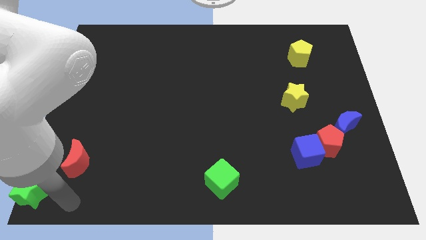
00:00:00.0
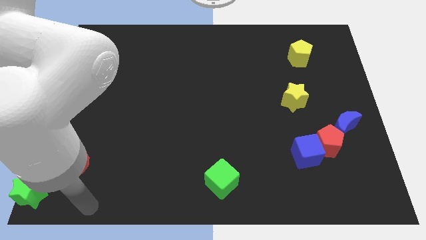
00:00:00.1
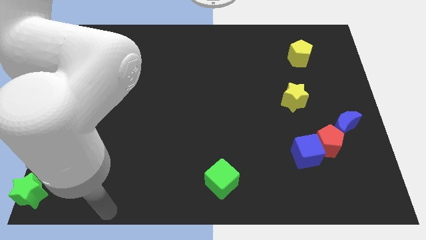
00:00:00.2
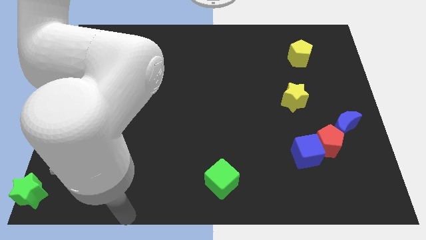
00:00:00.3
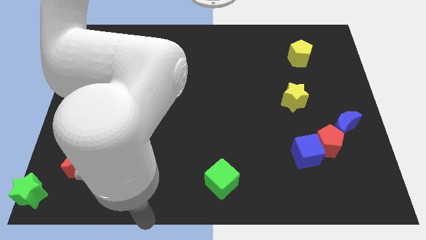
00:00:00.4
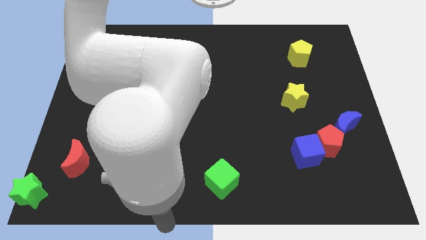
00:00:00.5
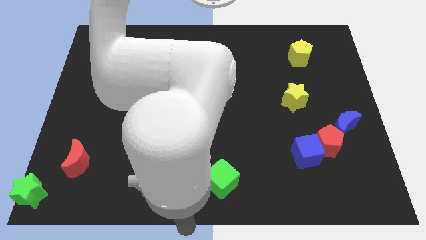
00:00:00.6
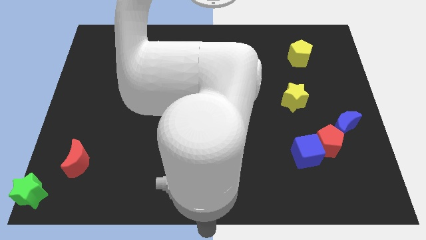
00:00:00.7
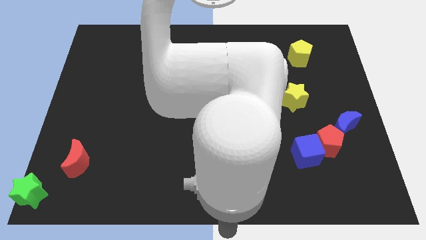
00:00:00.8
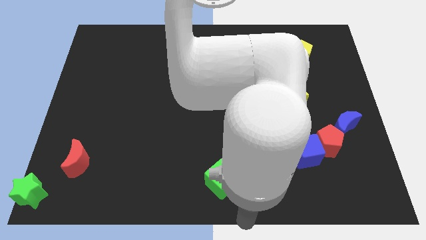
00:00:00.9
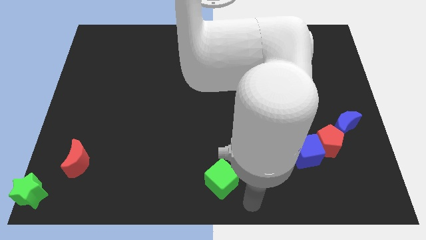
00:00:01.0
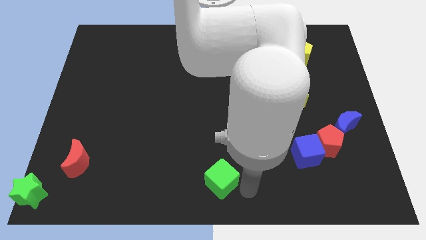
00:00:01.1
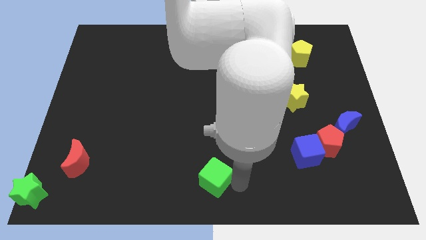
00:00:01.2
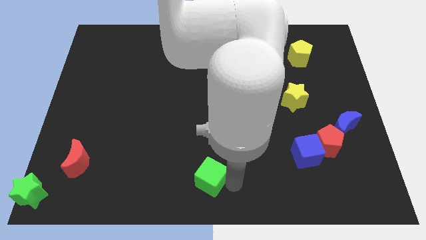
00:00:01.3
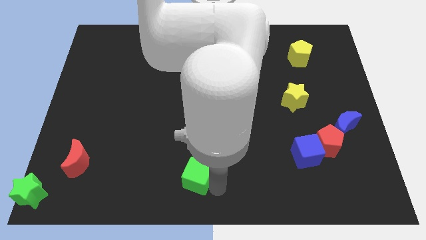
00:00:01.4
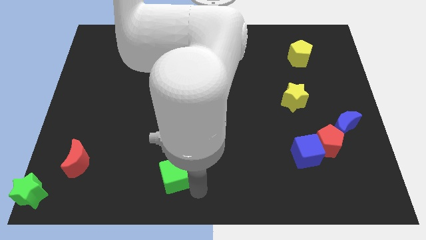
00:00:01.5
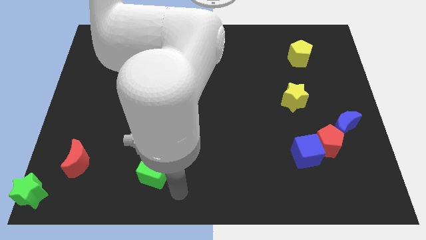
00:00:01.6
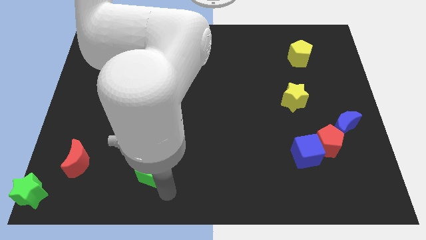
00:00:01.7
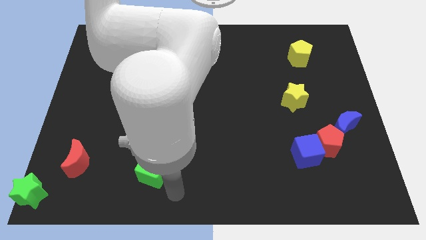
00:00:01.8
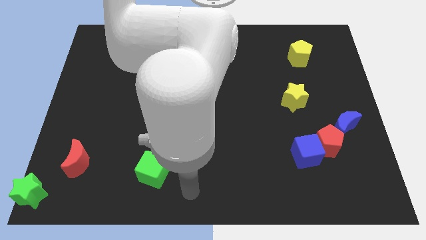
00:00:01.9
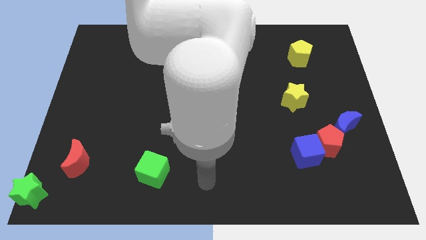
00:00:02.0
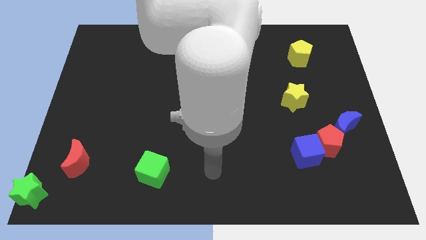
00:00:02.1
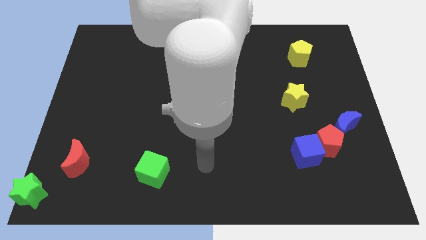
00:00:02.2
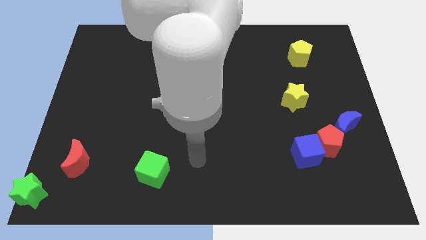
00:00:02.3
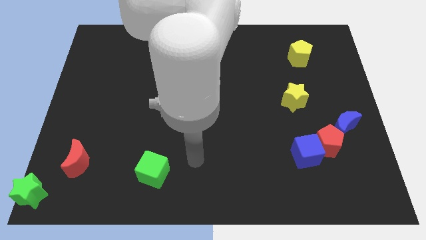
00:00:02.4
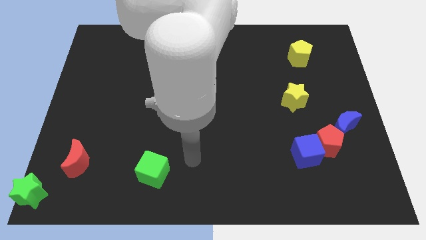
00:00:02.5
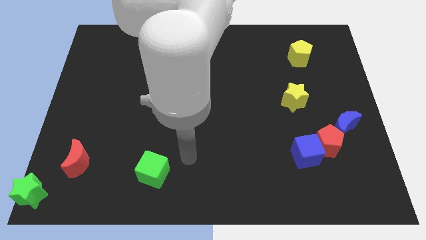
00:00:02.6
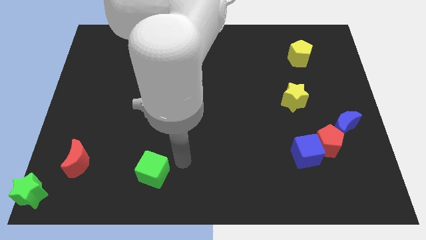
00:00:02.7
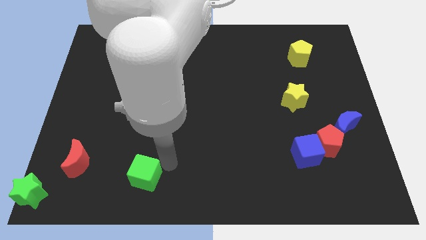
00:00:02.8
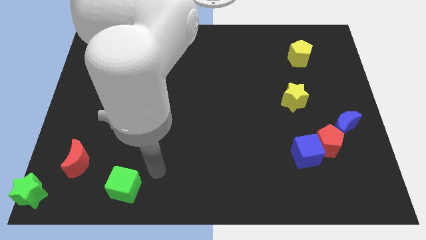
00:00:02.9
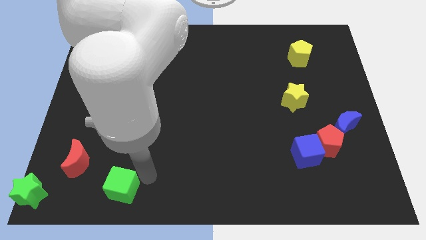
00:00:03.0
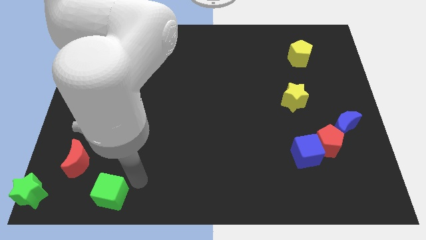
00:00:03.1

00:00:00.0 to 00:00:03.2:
push the green cube towards the red moon

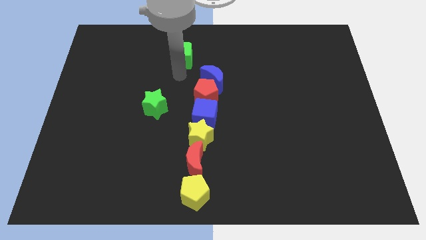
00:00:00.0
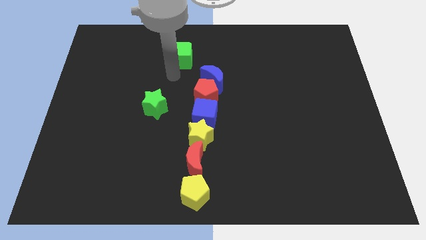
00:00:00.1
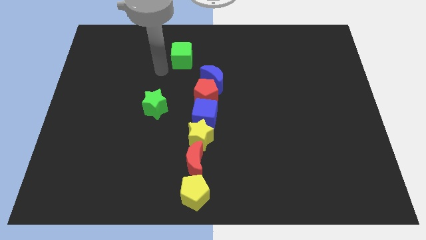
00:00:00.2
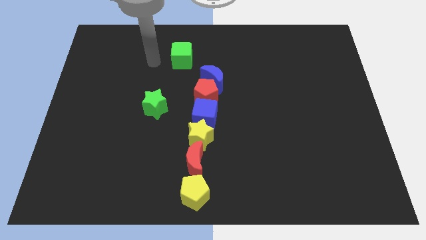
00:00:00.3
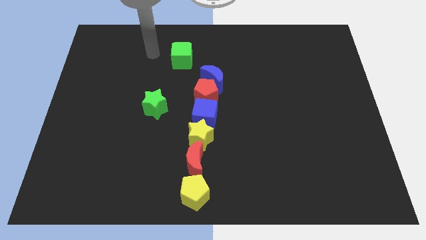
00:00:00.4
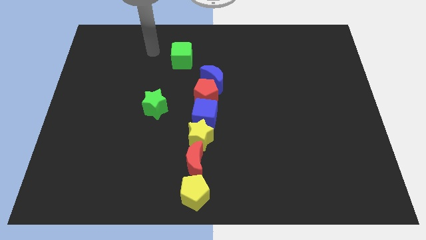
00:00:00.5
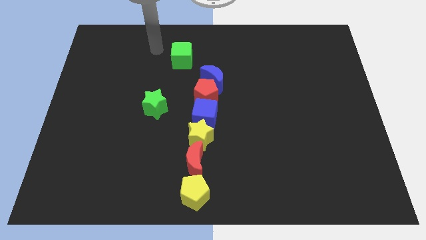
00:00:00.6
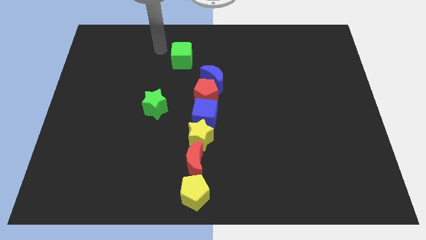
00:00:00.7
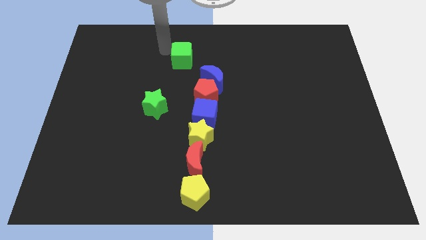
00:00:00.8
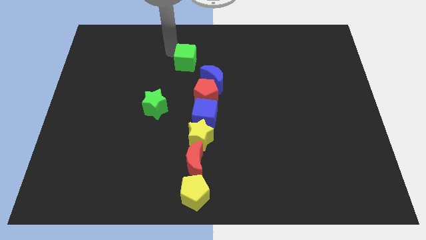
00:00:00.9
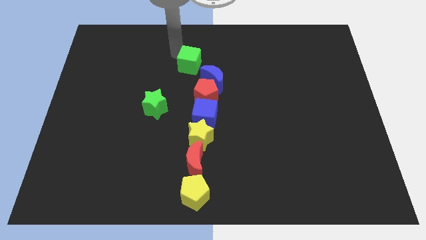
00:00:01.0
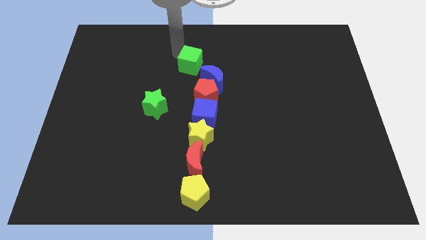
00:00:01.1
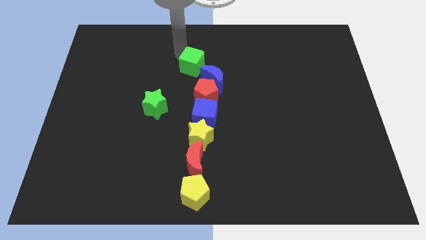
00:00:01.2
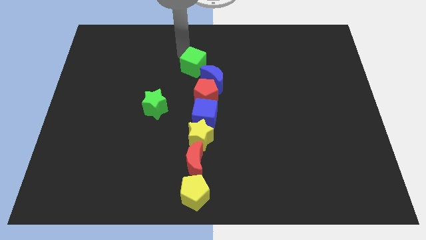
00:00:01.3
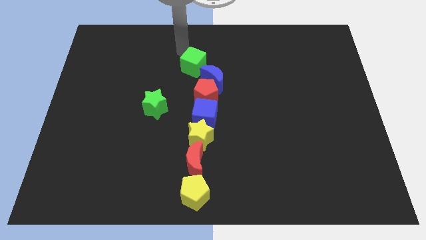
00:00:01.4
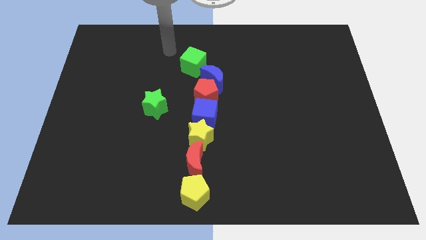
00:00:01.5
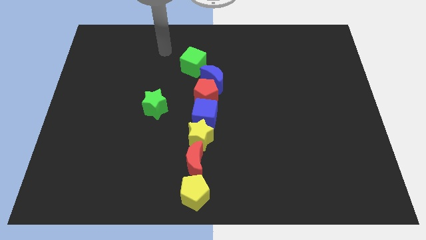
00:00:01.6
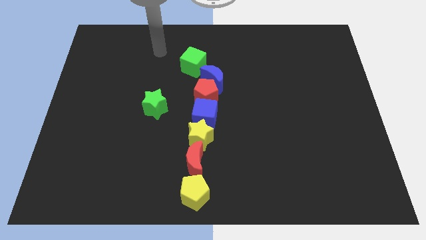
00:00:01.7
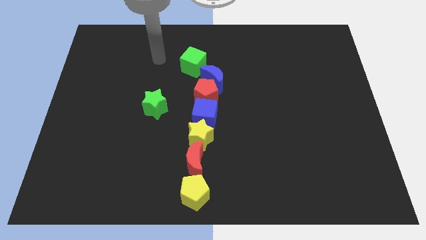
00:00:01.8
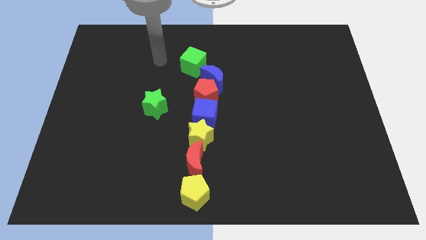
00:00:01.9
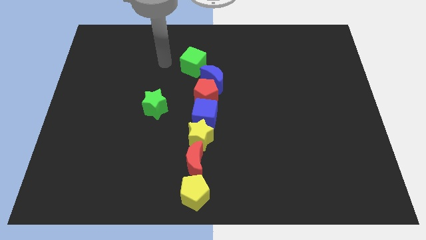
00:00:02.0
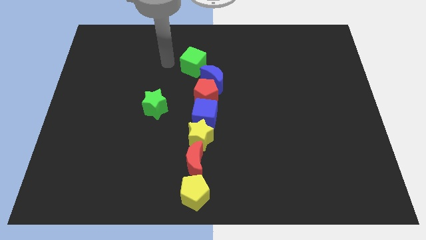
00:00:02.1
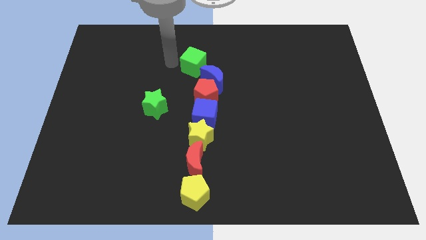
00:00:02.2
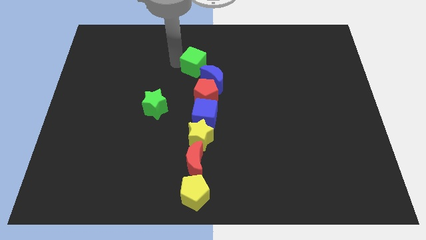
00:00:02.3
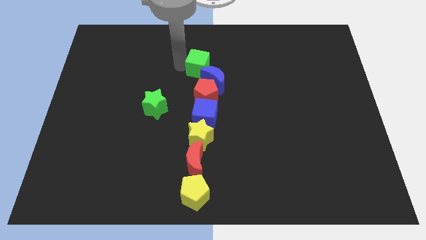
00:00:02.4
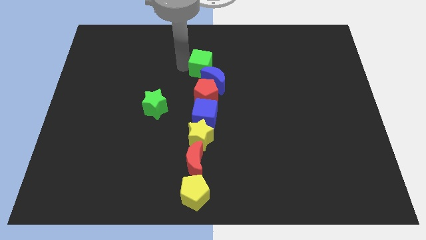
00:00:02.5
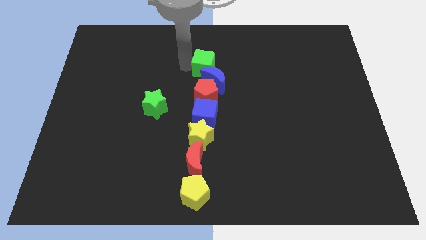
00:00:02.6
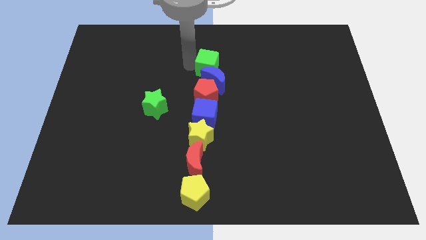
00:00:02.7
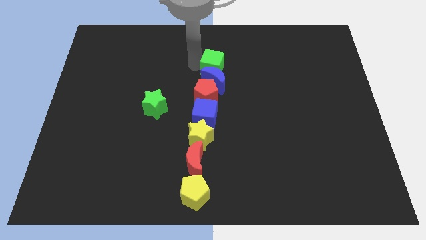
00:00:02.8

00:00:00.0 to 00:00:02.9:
push green cube towards top center of the board

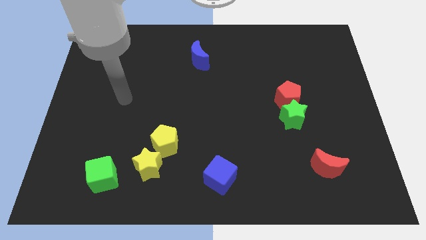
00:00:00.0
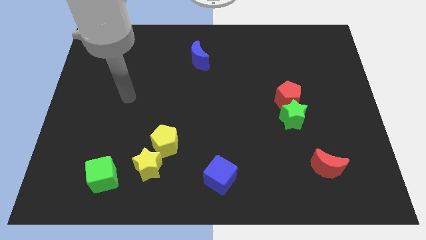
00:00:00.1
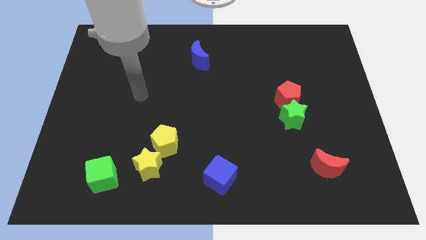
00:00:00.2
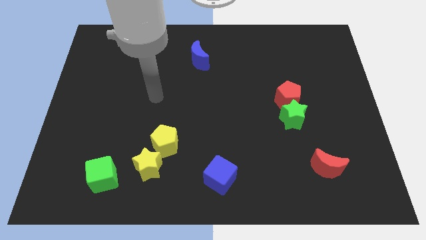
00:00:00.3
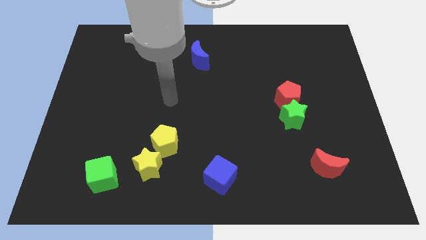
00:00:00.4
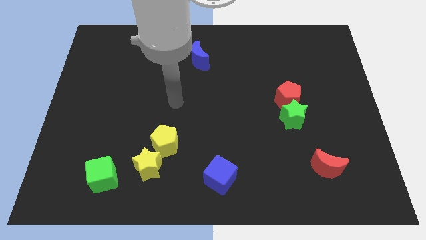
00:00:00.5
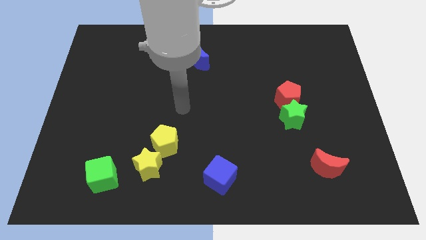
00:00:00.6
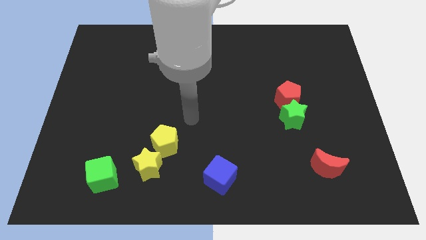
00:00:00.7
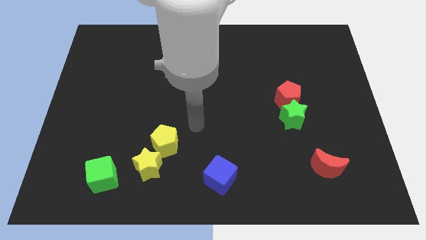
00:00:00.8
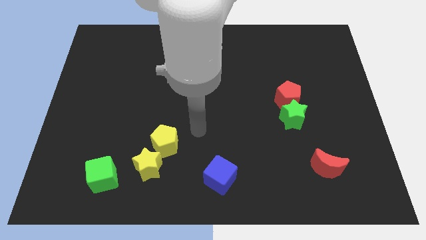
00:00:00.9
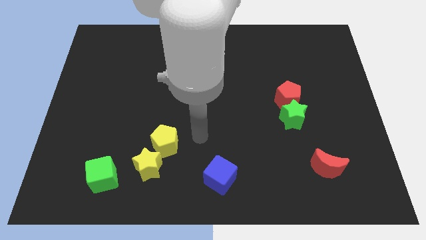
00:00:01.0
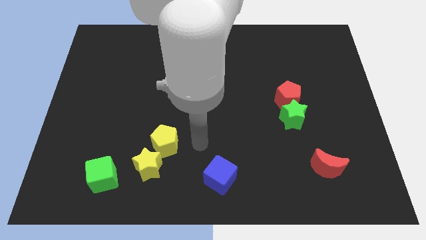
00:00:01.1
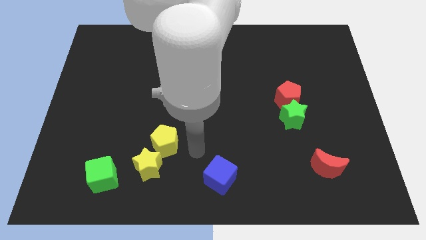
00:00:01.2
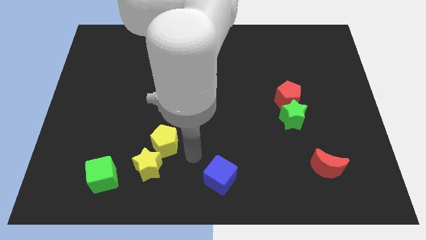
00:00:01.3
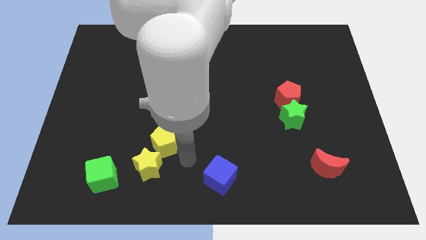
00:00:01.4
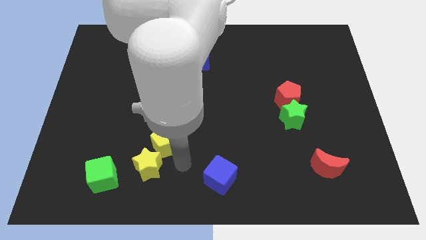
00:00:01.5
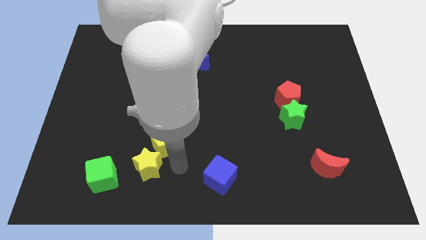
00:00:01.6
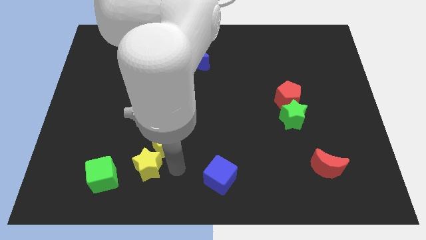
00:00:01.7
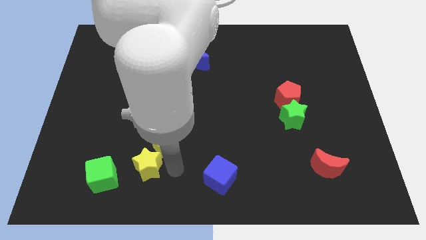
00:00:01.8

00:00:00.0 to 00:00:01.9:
point your arm right to yellow star

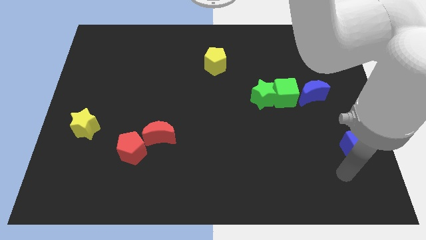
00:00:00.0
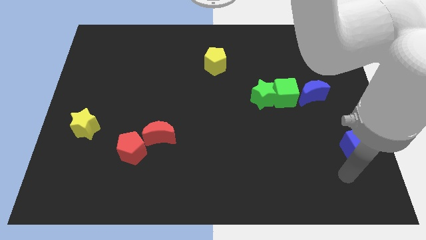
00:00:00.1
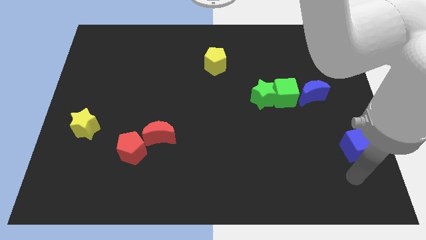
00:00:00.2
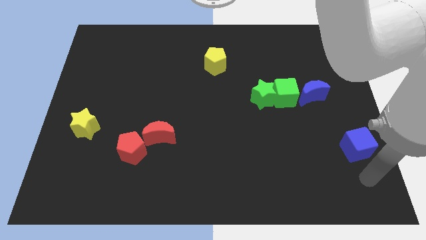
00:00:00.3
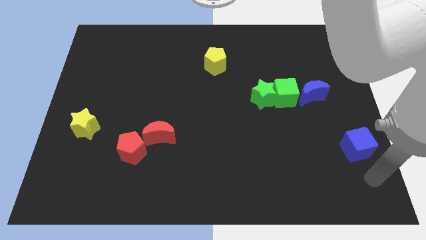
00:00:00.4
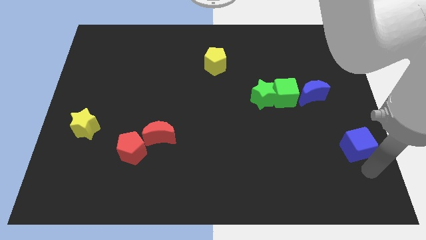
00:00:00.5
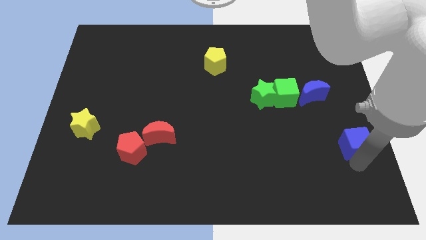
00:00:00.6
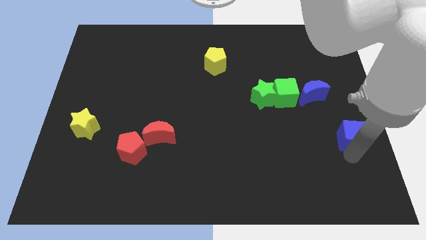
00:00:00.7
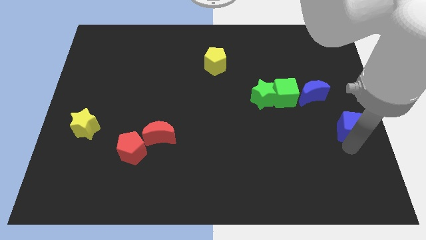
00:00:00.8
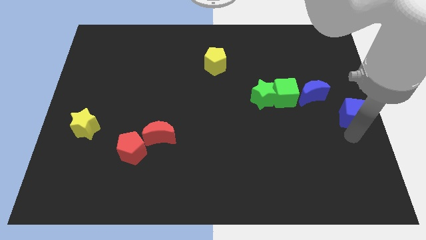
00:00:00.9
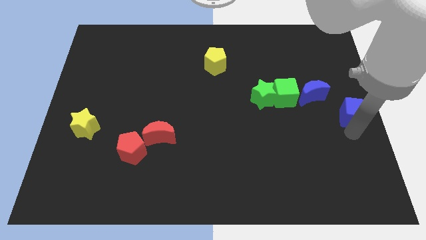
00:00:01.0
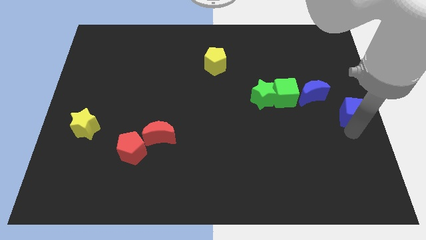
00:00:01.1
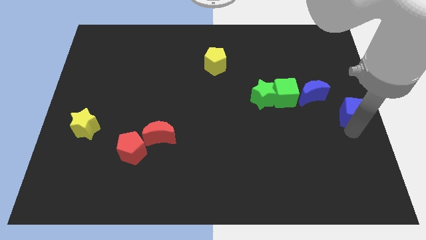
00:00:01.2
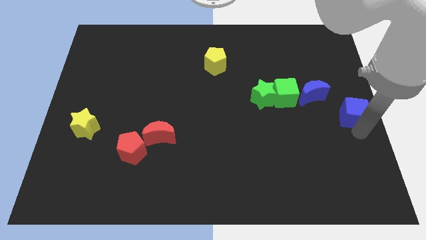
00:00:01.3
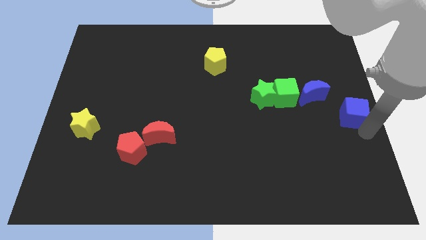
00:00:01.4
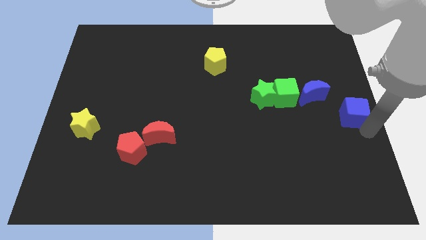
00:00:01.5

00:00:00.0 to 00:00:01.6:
move the blue block to the center right of the board
